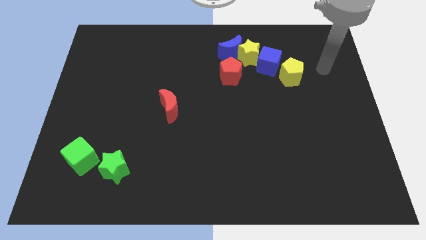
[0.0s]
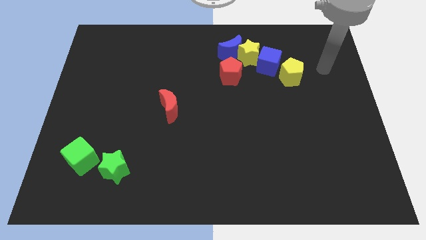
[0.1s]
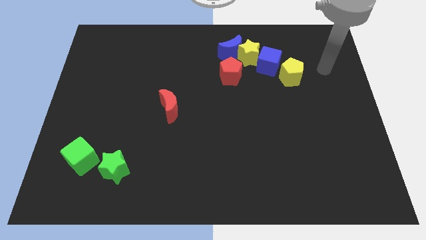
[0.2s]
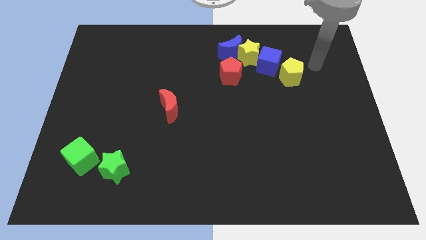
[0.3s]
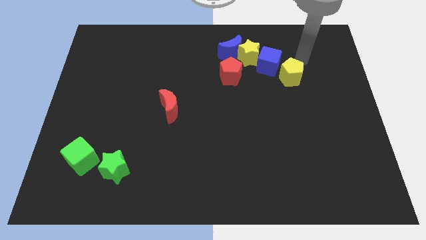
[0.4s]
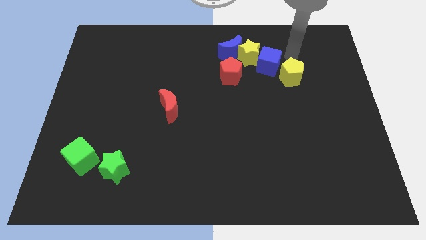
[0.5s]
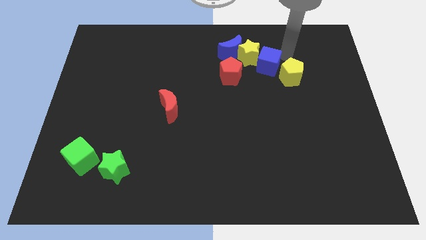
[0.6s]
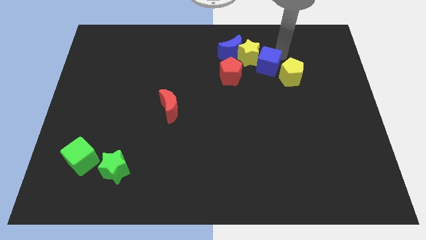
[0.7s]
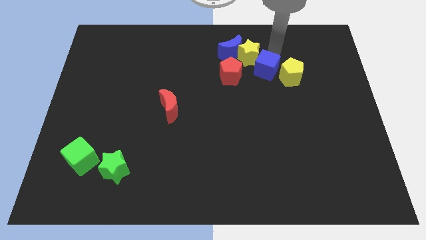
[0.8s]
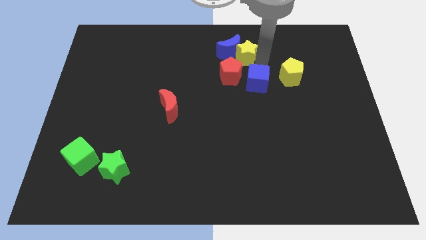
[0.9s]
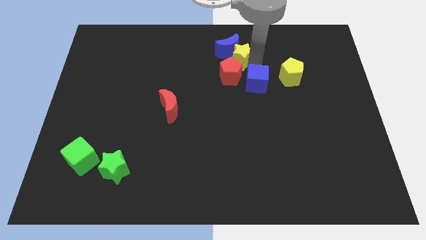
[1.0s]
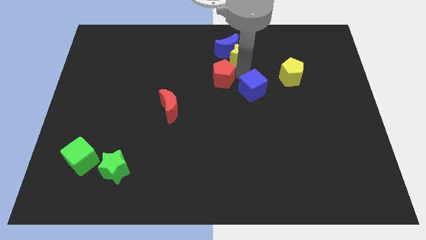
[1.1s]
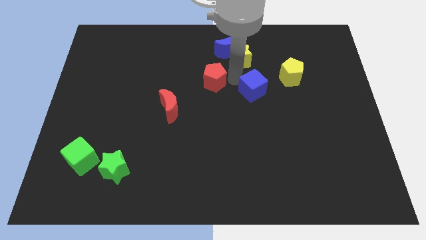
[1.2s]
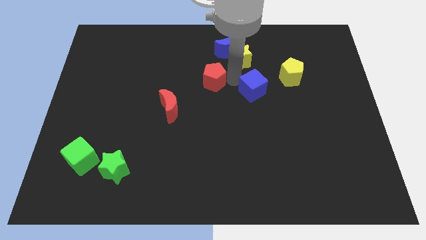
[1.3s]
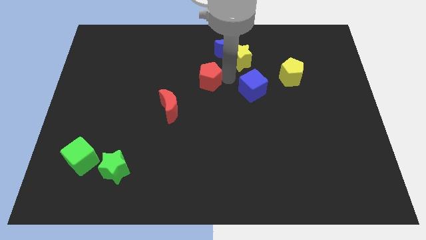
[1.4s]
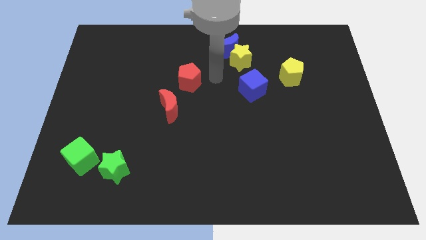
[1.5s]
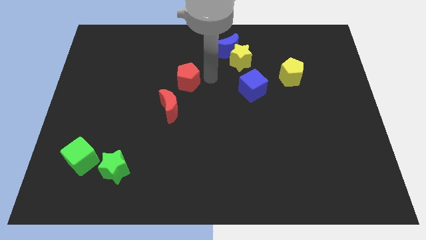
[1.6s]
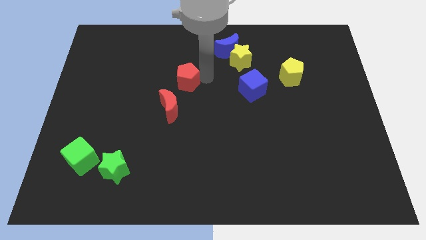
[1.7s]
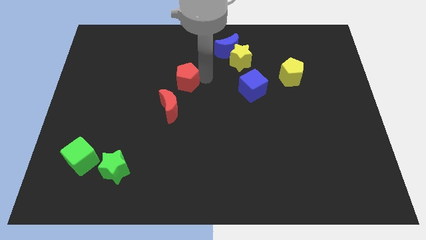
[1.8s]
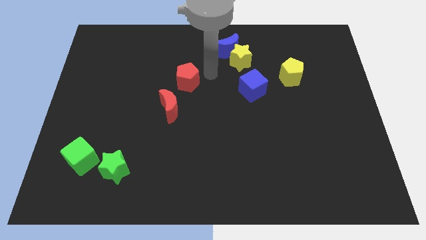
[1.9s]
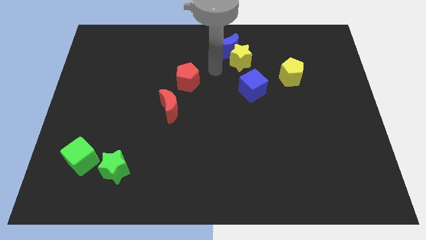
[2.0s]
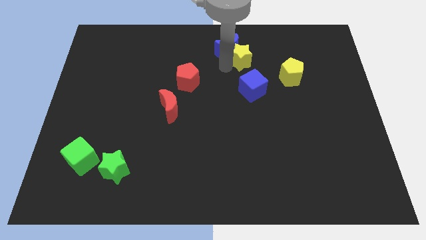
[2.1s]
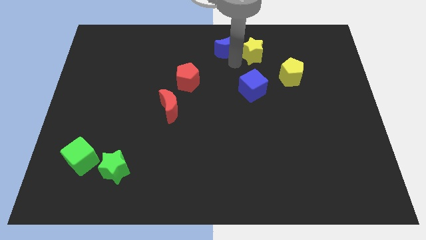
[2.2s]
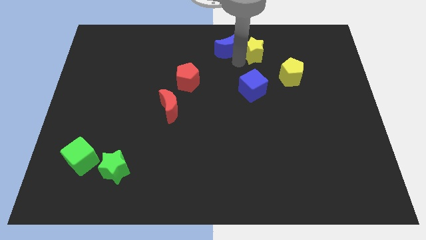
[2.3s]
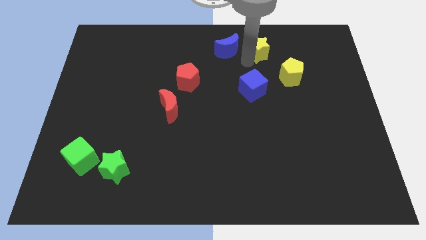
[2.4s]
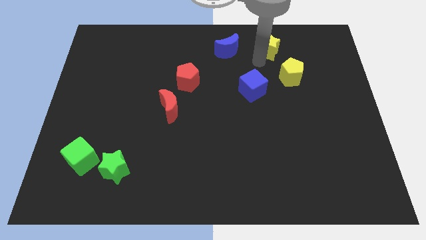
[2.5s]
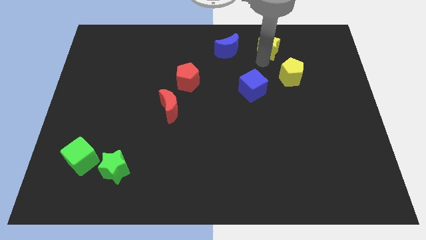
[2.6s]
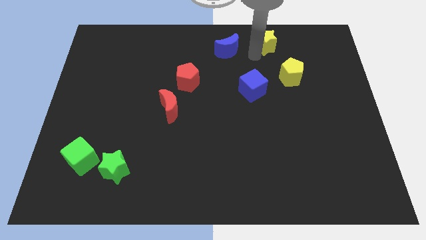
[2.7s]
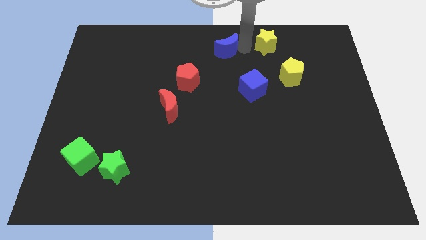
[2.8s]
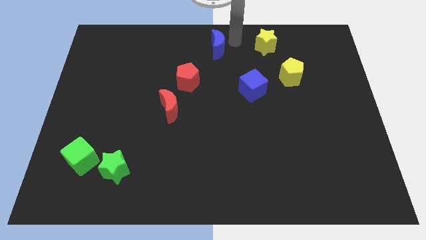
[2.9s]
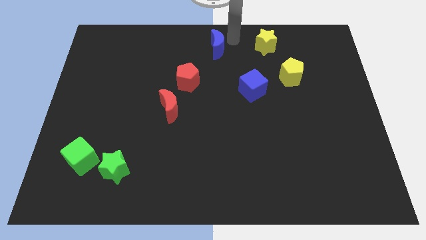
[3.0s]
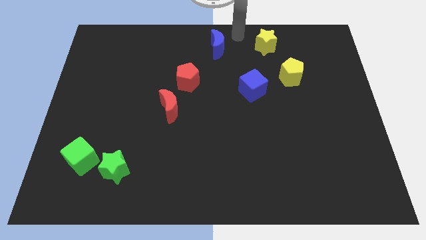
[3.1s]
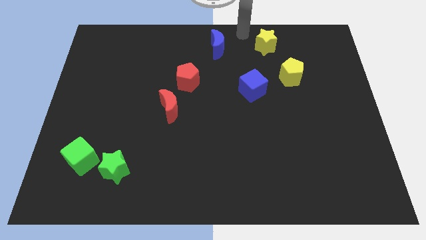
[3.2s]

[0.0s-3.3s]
separate the blue moon from a group of blocks

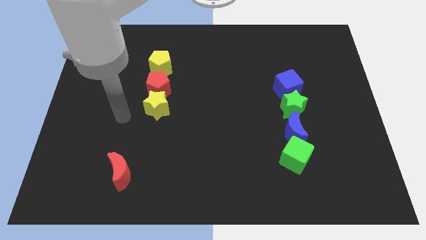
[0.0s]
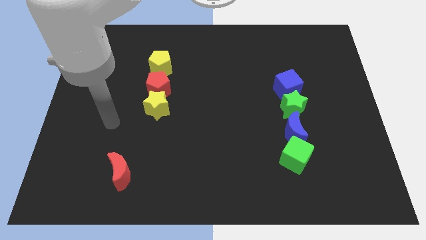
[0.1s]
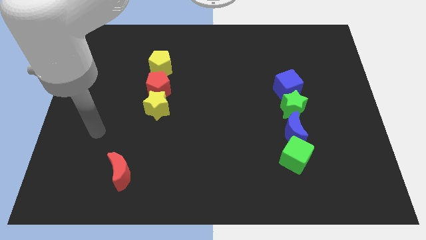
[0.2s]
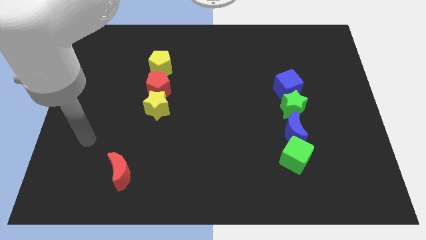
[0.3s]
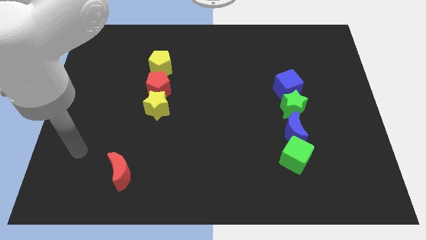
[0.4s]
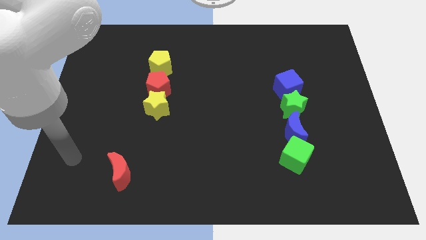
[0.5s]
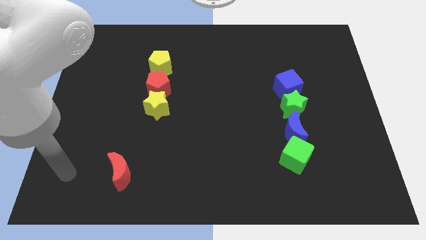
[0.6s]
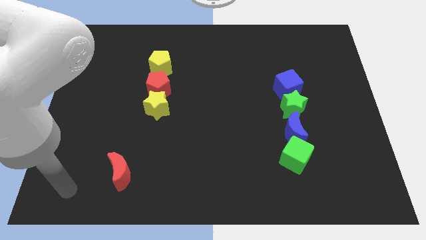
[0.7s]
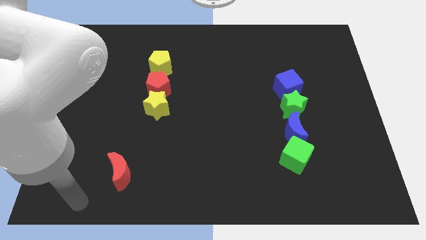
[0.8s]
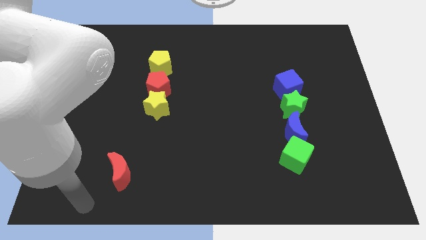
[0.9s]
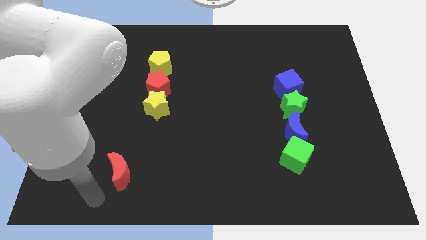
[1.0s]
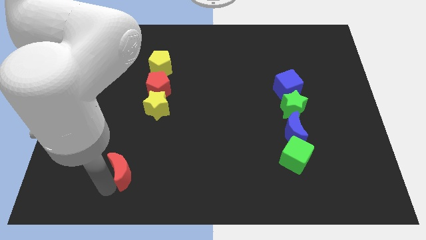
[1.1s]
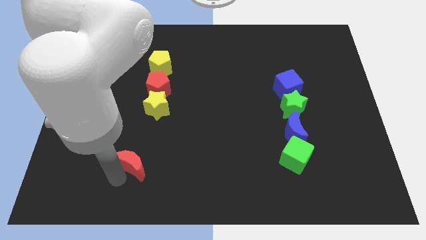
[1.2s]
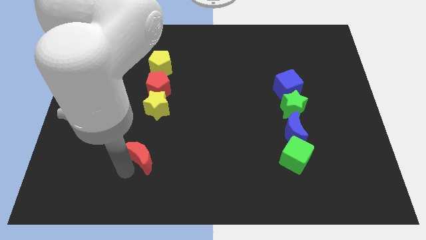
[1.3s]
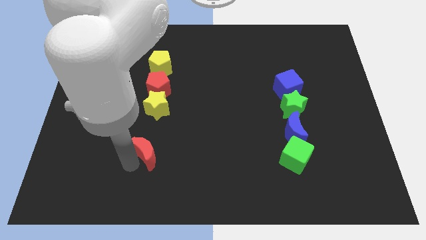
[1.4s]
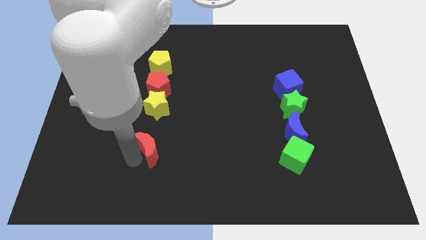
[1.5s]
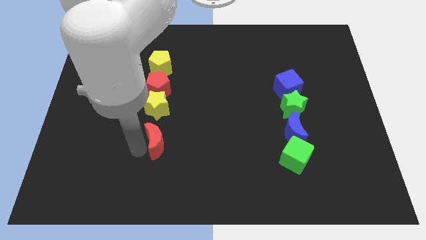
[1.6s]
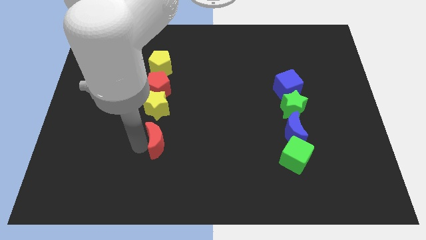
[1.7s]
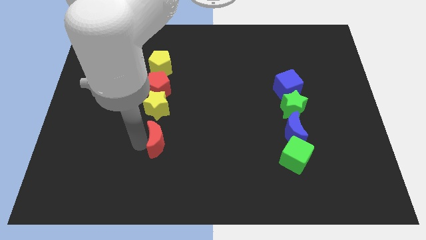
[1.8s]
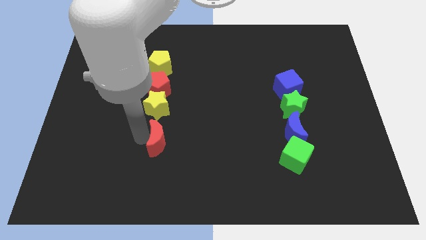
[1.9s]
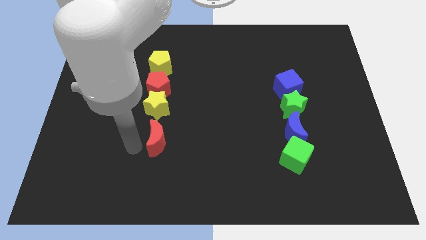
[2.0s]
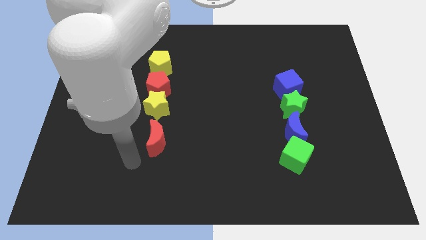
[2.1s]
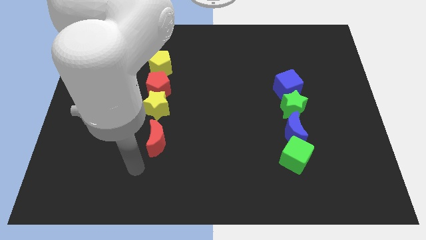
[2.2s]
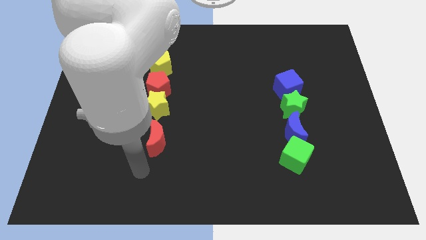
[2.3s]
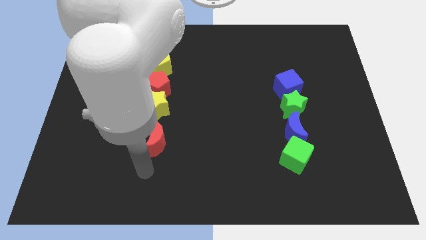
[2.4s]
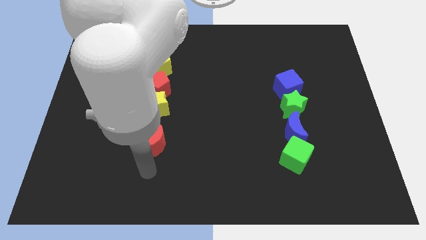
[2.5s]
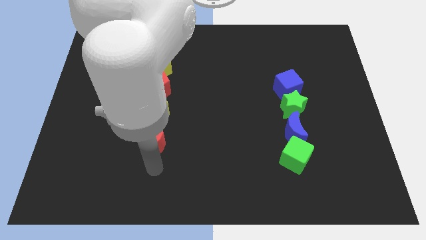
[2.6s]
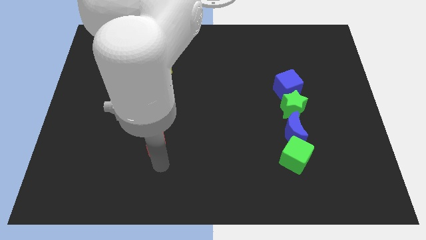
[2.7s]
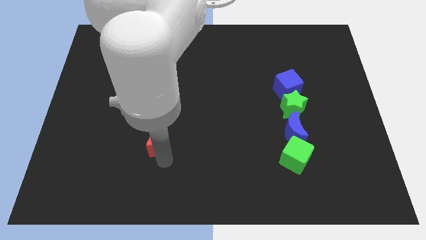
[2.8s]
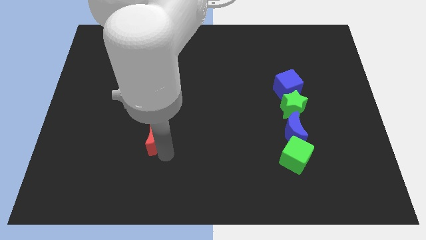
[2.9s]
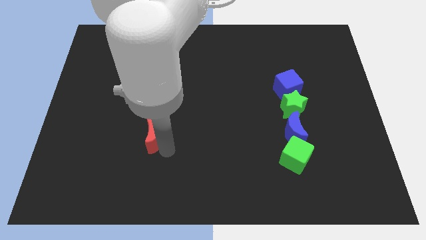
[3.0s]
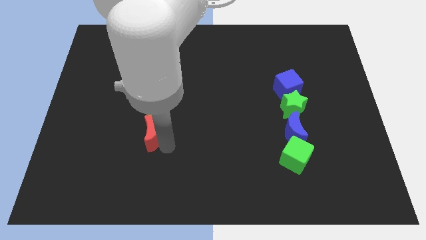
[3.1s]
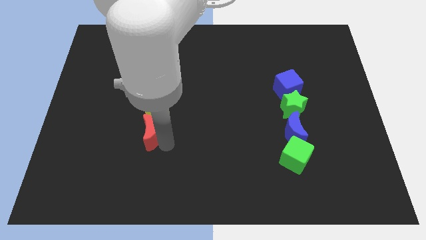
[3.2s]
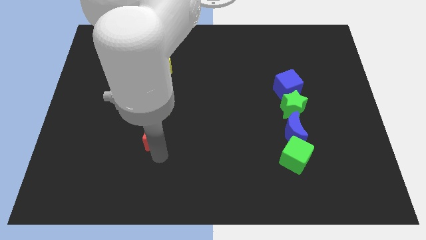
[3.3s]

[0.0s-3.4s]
move red crescent to the bottom of yellow star

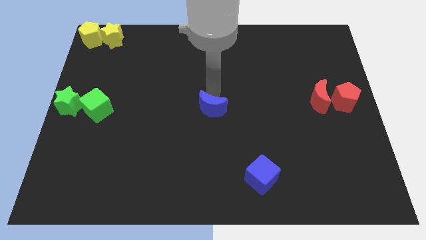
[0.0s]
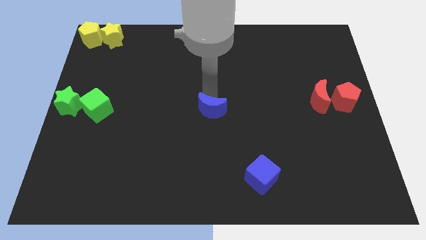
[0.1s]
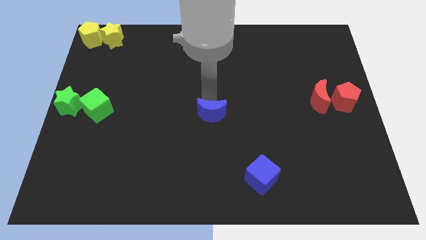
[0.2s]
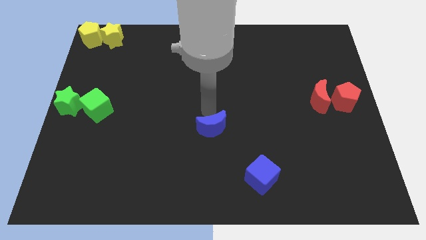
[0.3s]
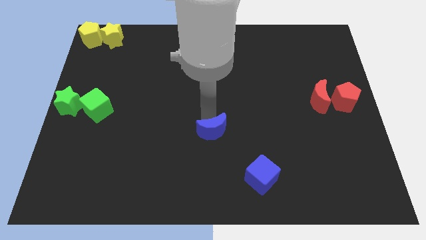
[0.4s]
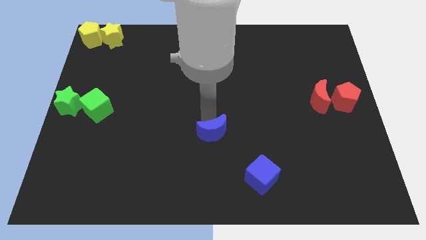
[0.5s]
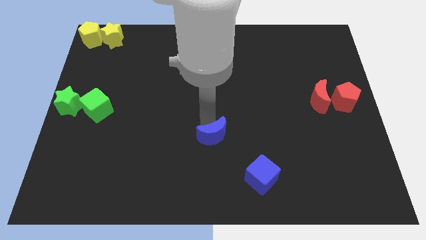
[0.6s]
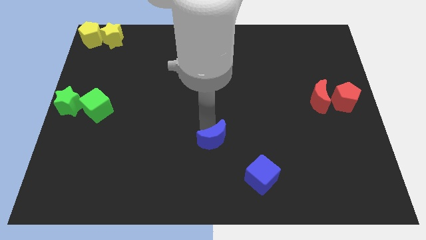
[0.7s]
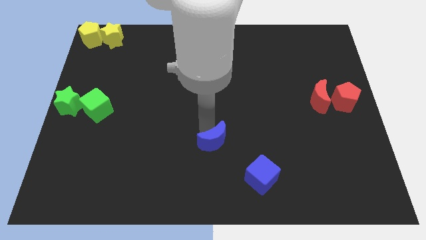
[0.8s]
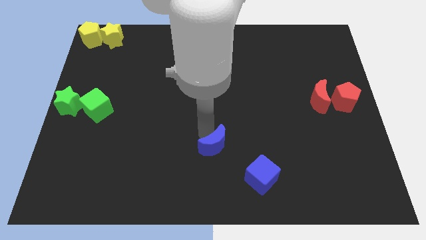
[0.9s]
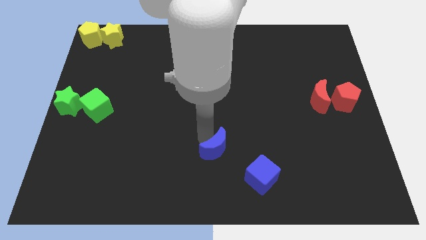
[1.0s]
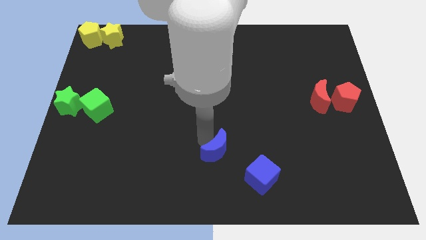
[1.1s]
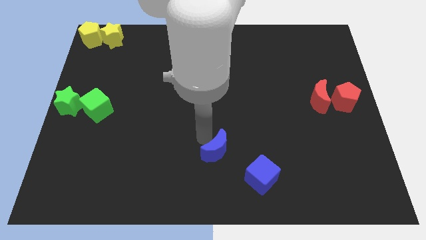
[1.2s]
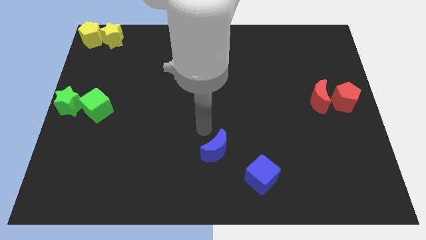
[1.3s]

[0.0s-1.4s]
move the blue moon diagonally to the left of the blue cube

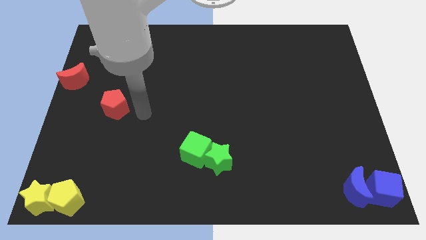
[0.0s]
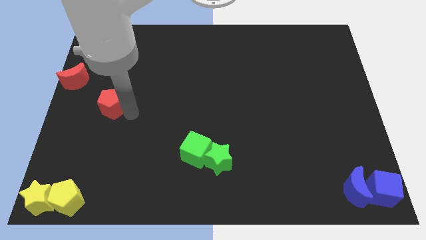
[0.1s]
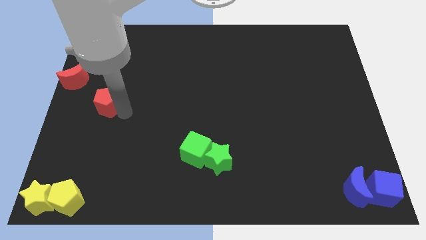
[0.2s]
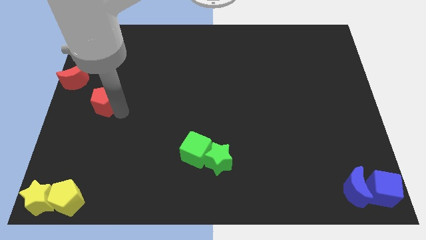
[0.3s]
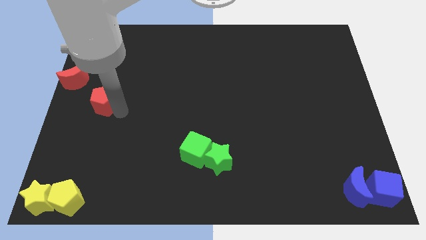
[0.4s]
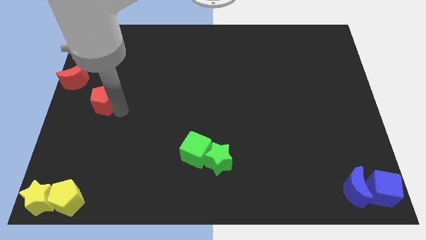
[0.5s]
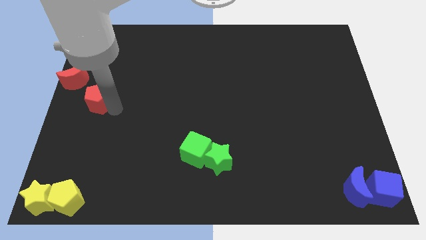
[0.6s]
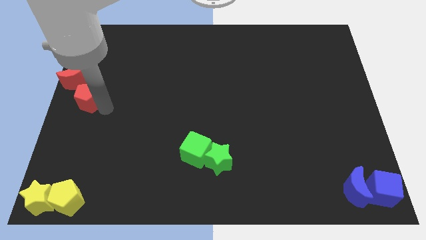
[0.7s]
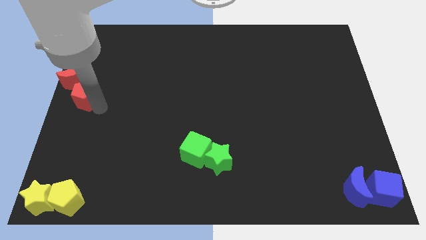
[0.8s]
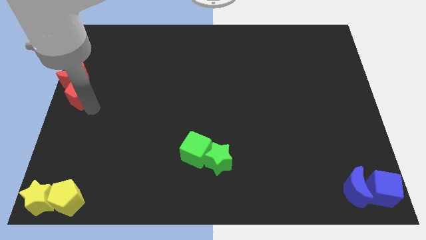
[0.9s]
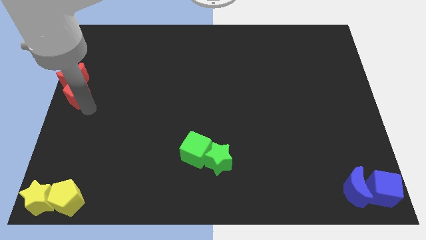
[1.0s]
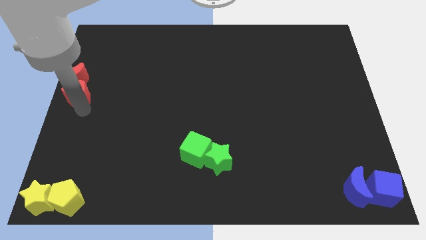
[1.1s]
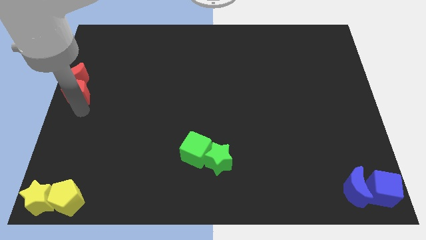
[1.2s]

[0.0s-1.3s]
place the red pentagon down to the red moon
